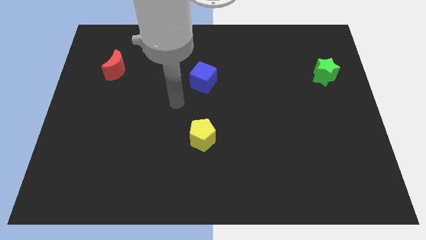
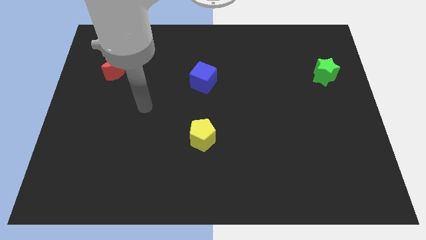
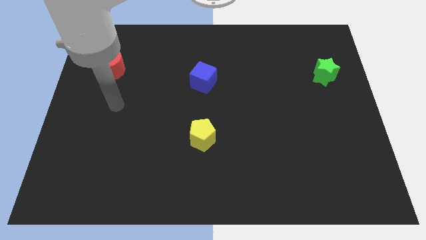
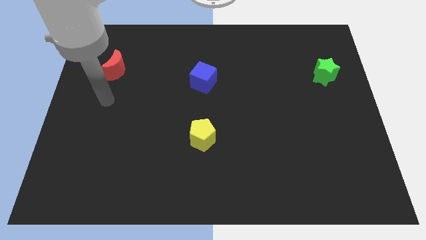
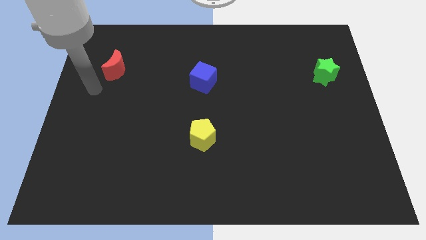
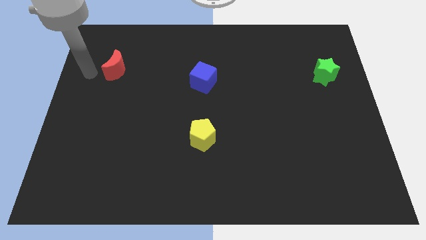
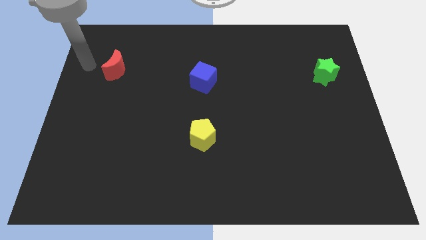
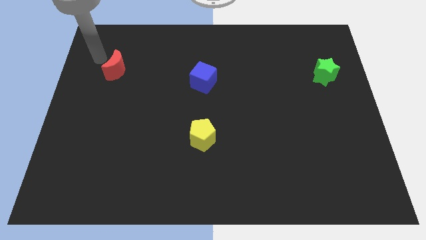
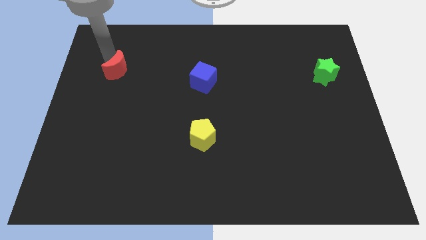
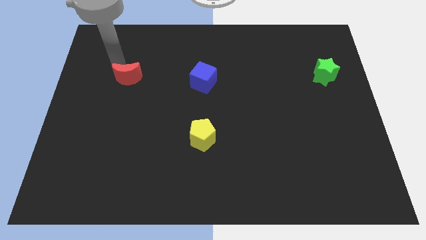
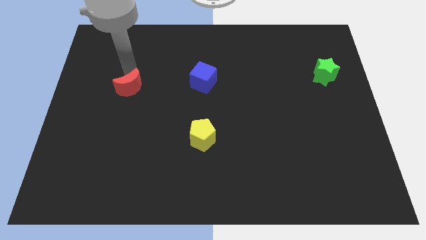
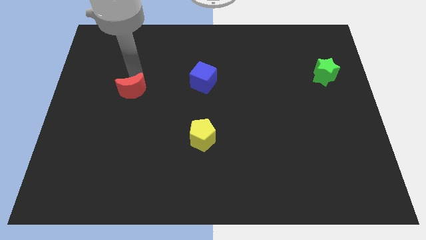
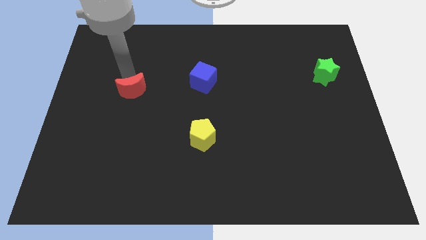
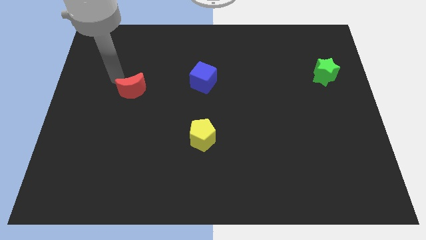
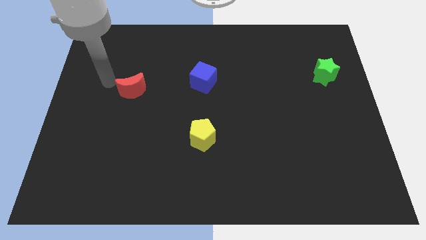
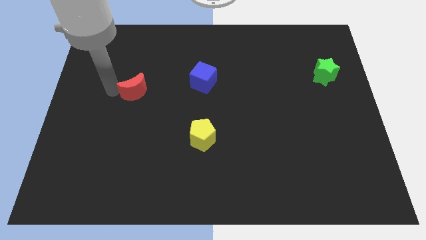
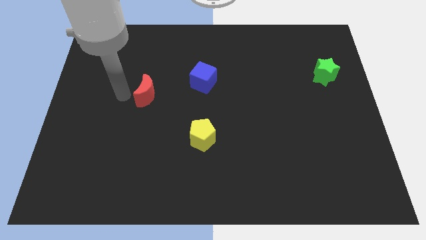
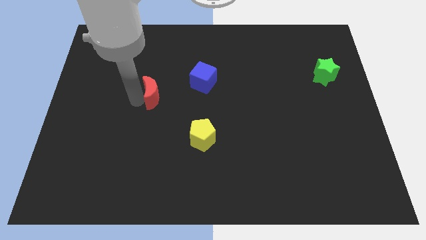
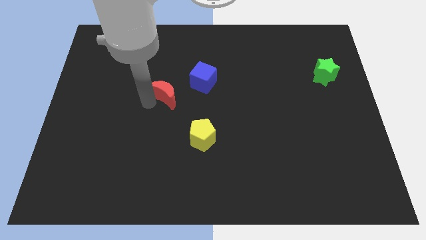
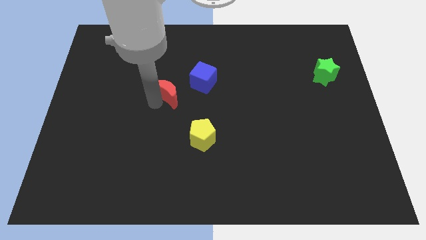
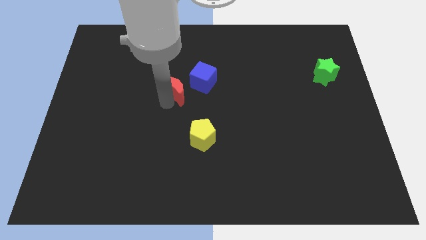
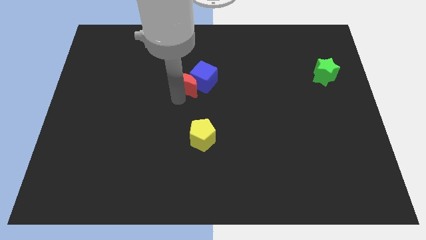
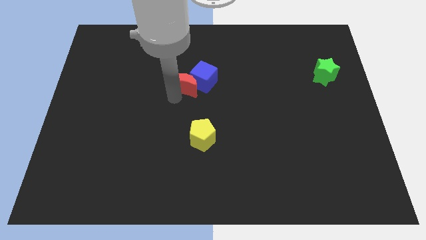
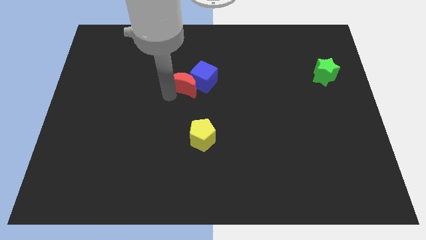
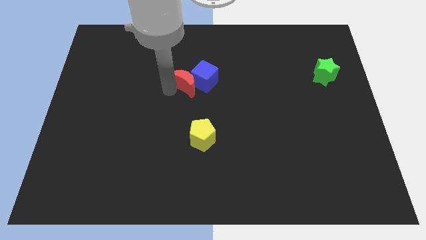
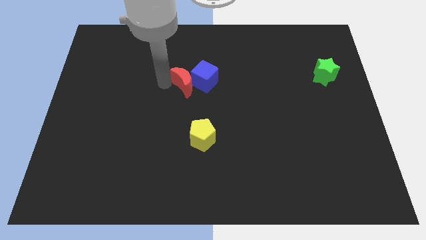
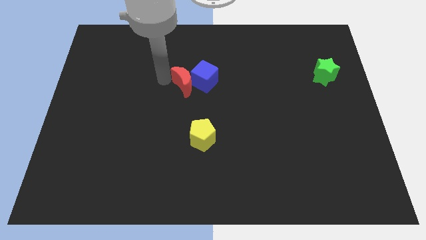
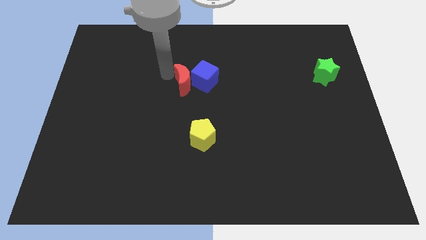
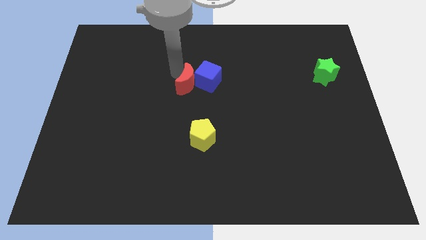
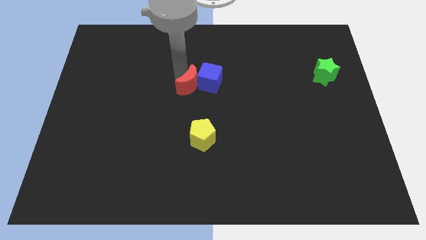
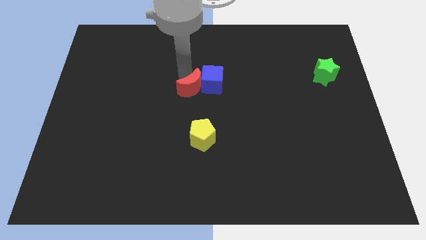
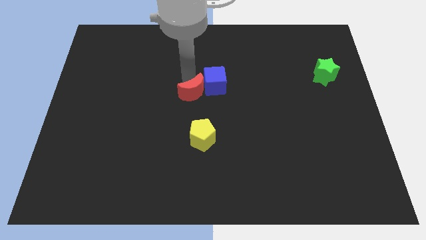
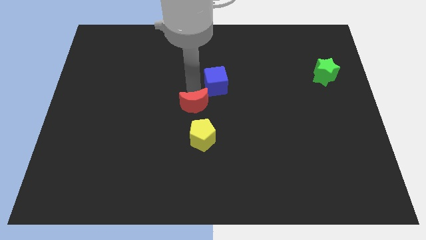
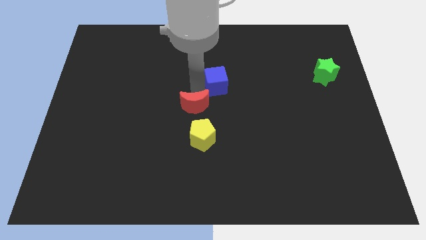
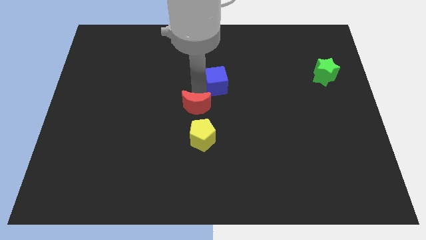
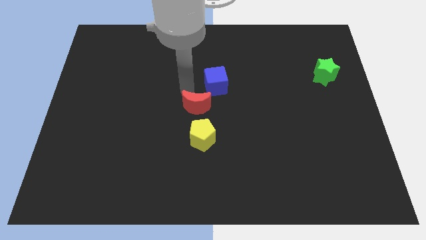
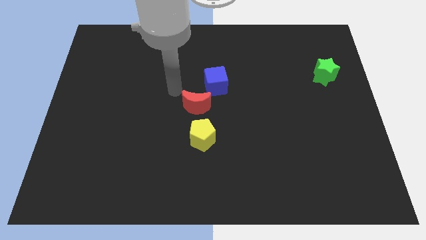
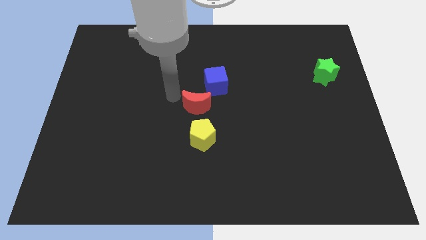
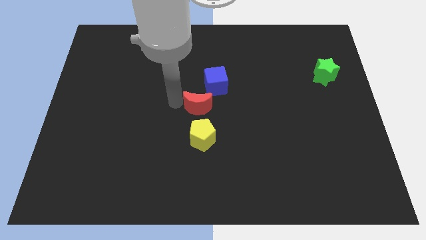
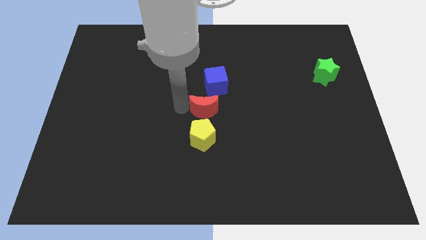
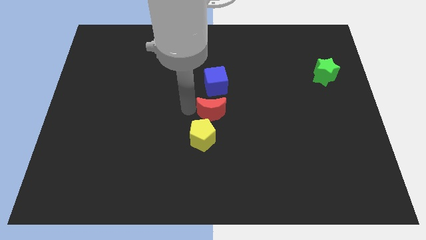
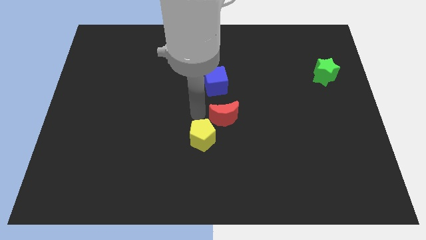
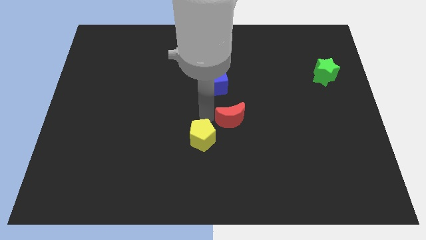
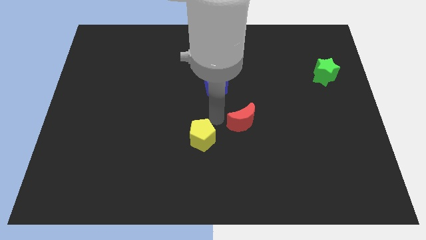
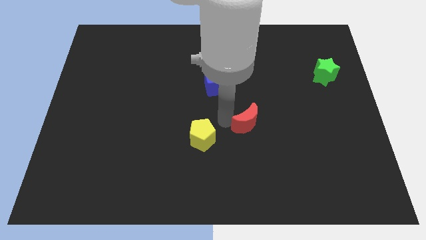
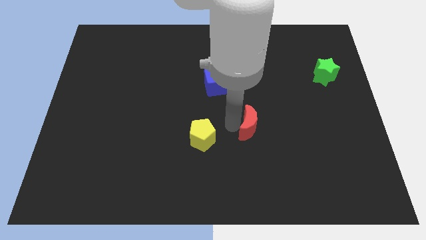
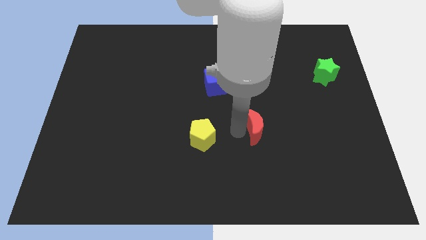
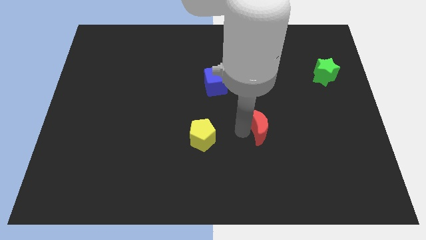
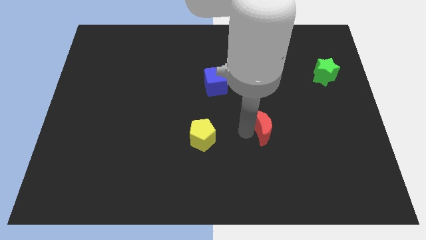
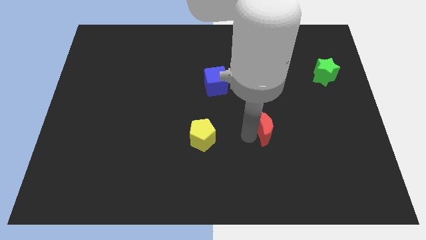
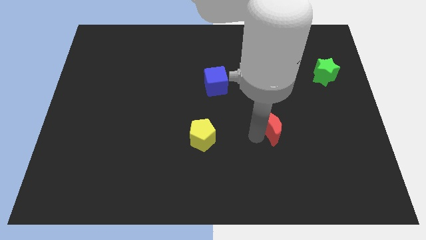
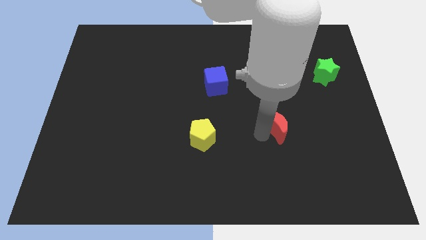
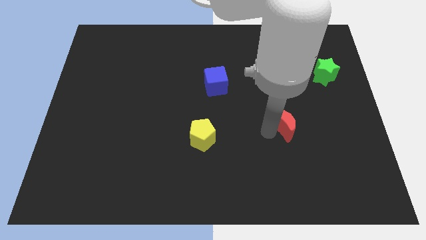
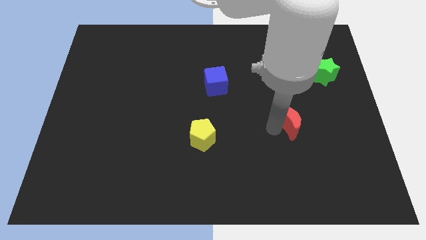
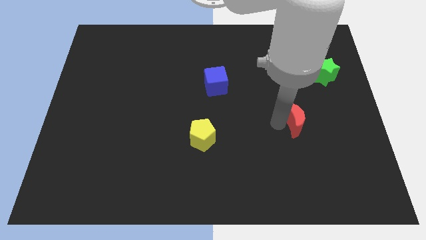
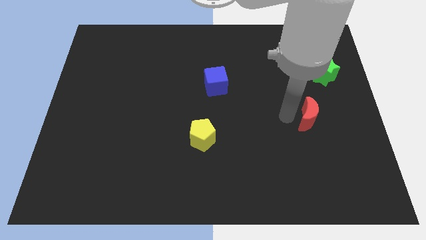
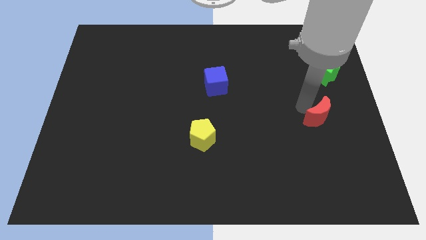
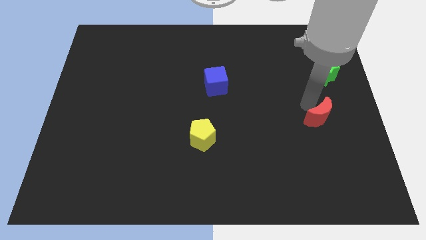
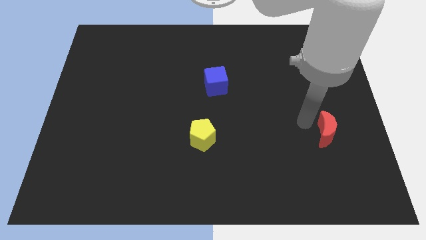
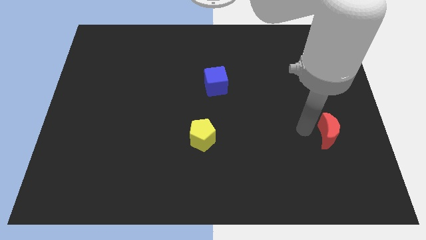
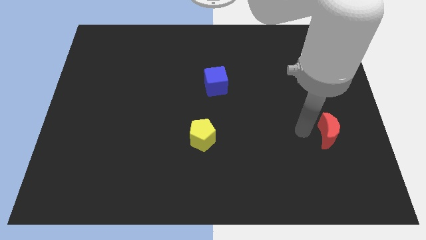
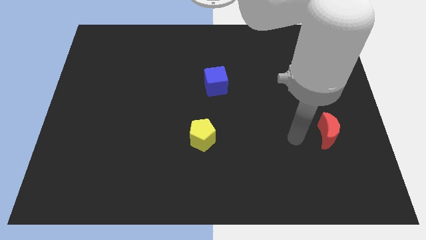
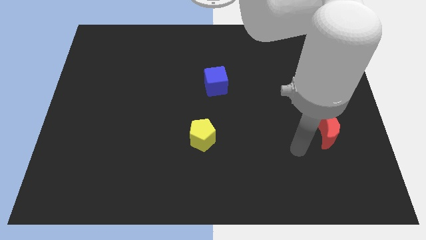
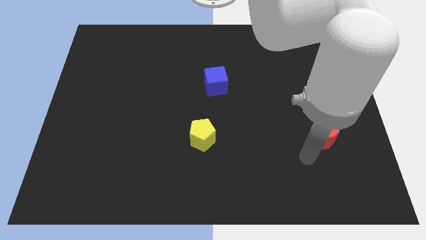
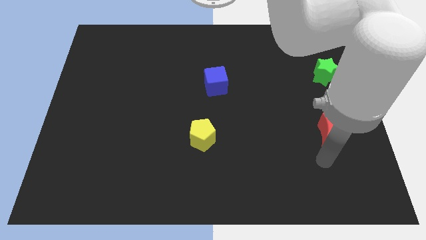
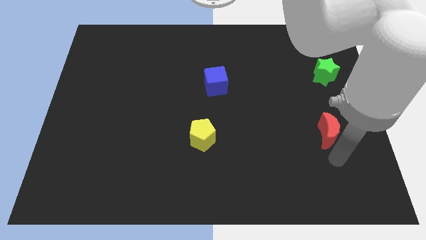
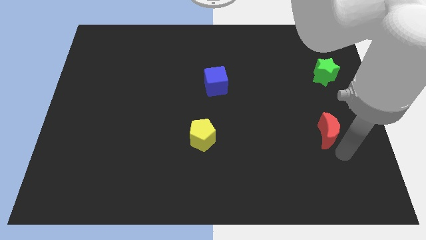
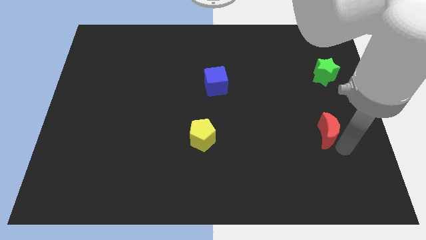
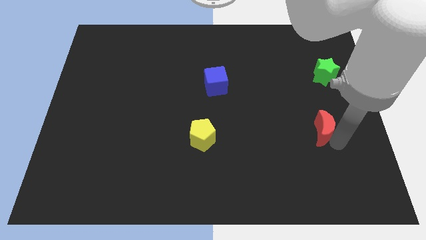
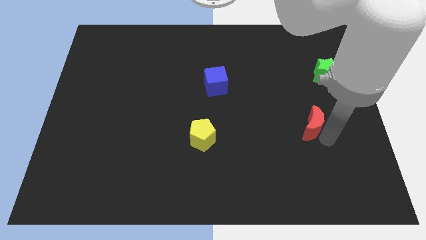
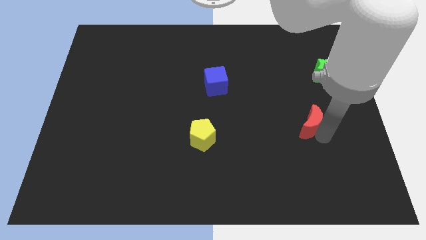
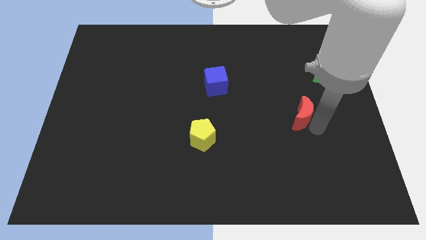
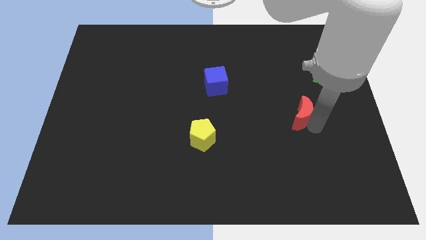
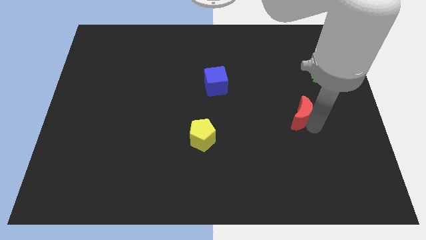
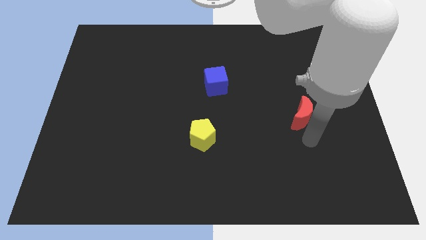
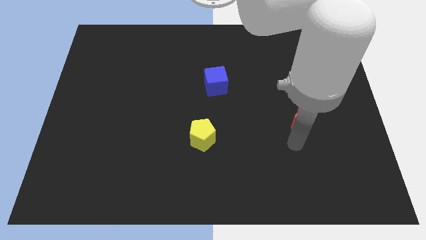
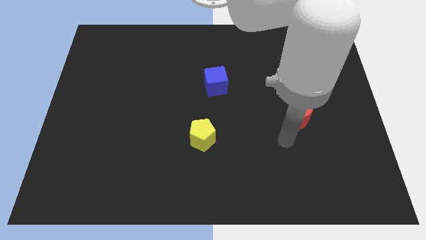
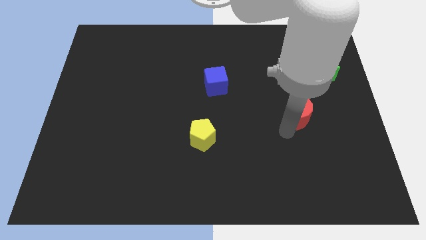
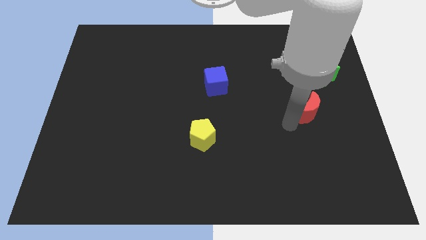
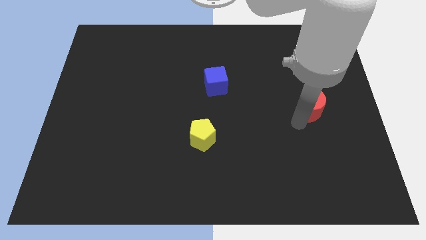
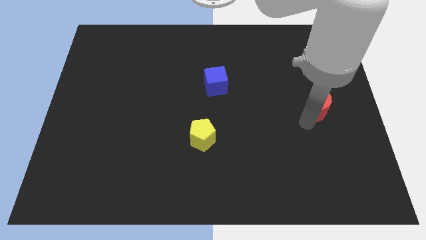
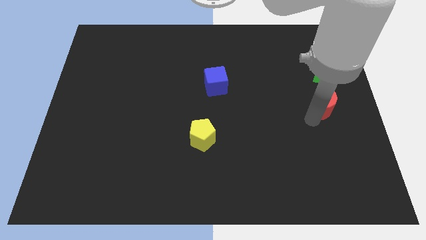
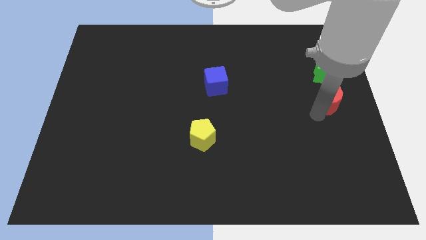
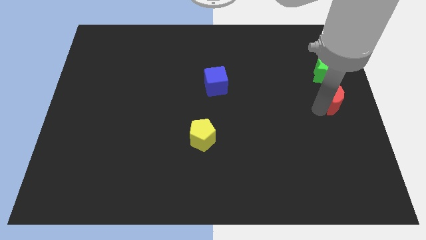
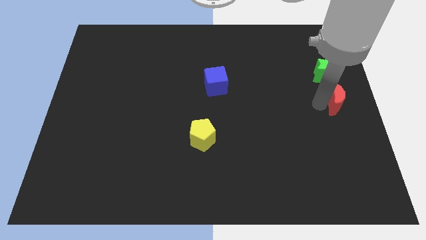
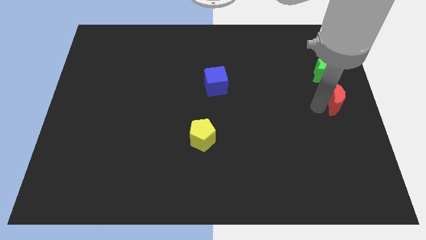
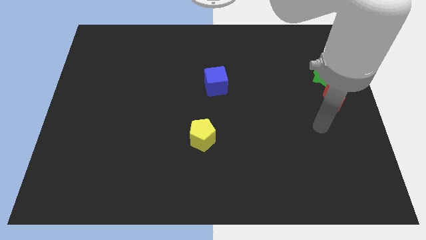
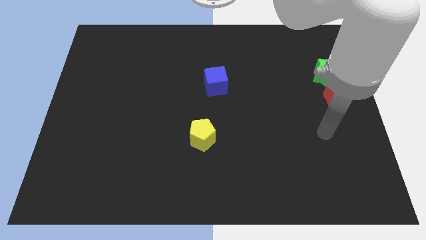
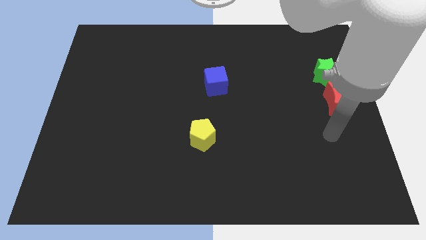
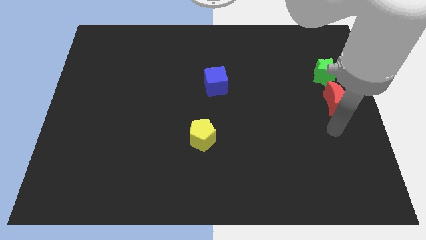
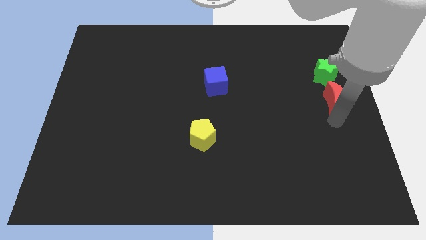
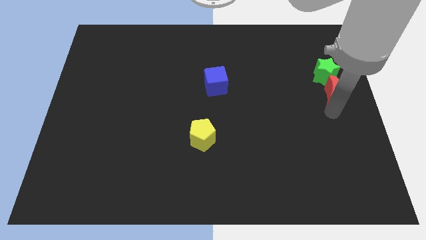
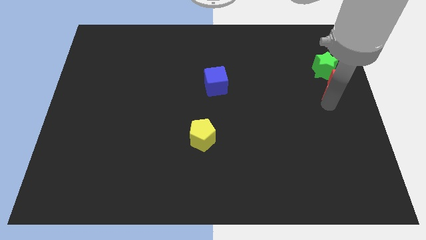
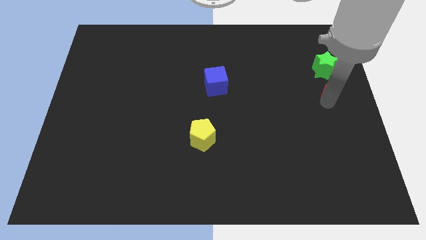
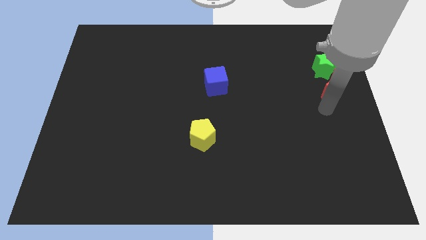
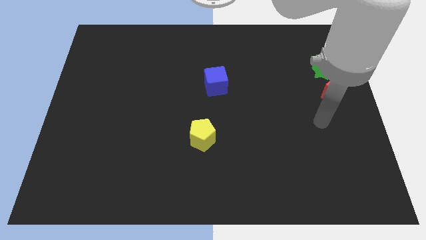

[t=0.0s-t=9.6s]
move the red moon to the green block
